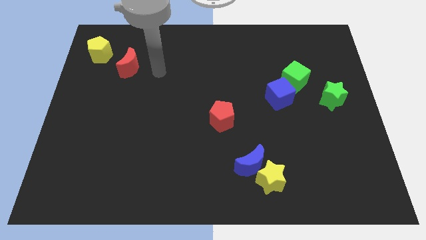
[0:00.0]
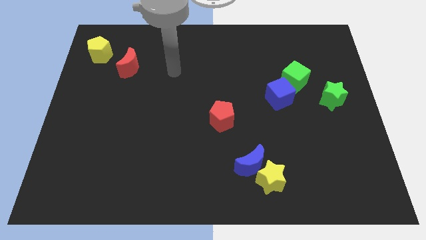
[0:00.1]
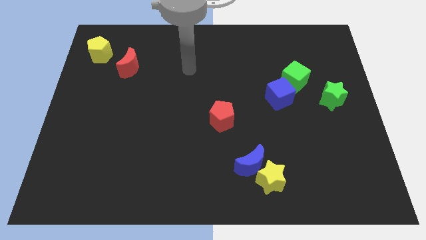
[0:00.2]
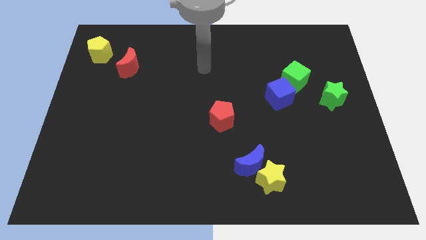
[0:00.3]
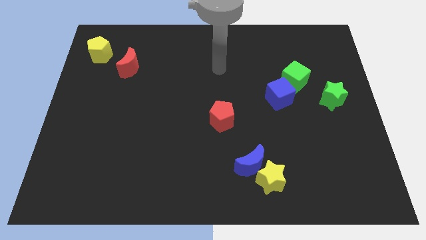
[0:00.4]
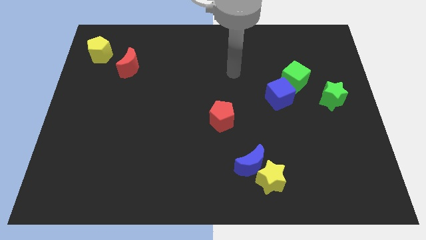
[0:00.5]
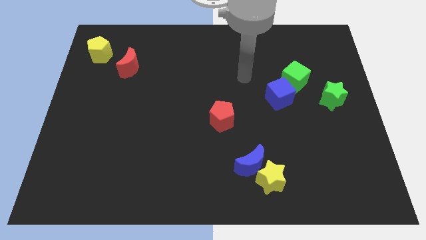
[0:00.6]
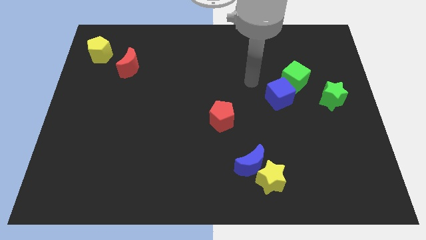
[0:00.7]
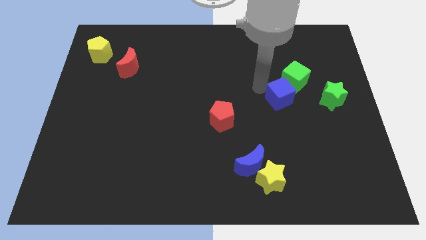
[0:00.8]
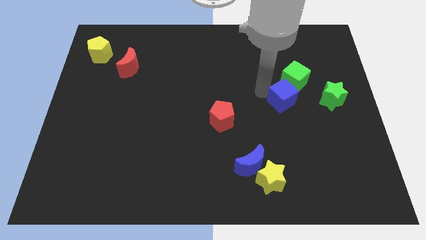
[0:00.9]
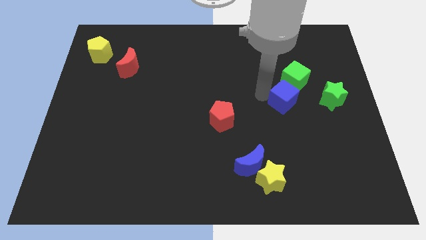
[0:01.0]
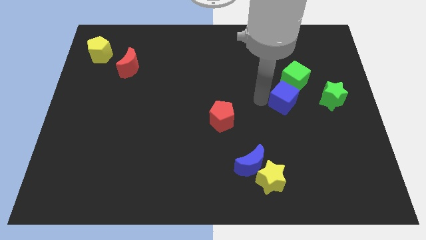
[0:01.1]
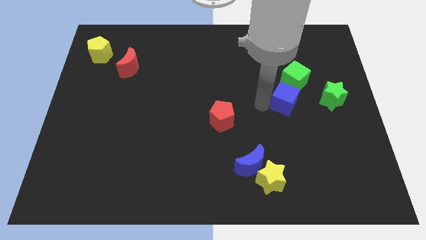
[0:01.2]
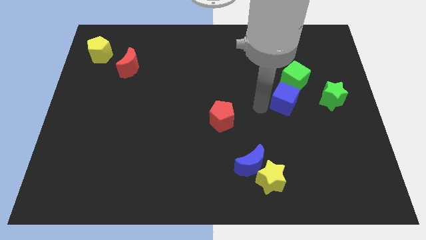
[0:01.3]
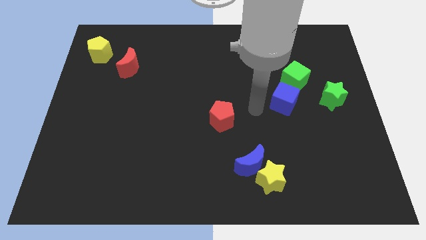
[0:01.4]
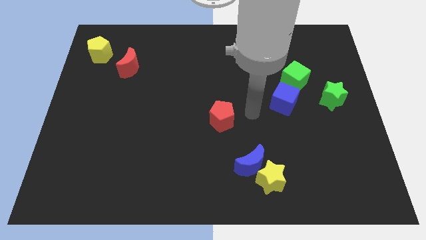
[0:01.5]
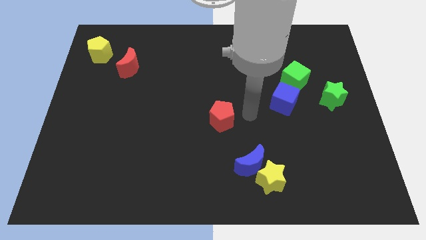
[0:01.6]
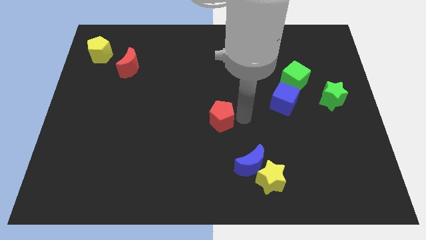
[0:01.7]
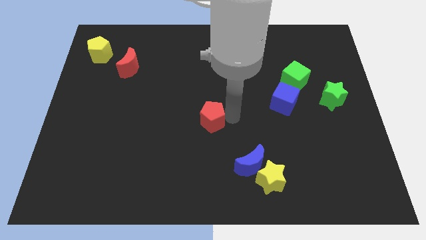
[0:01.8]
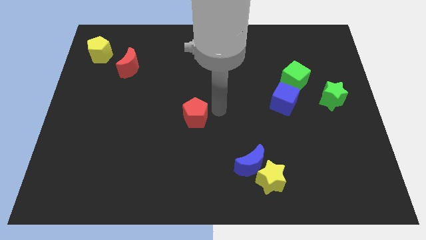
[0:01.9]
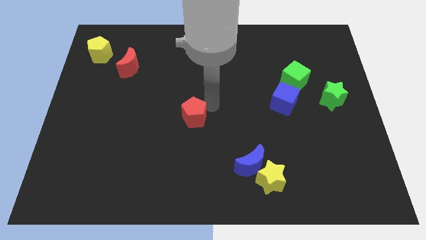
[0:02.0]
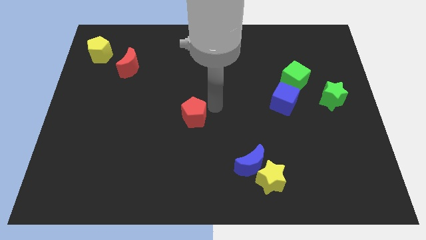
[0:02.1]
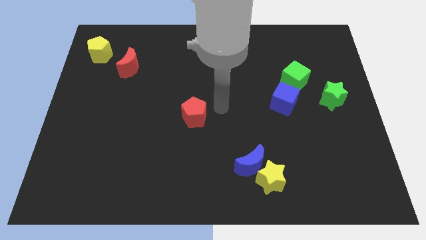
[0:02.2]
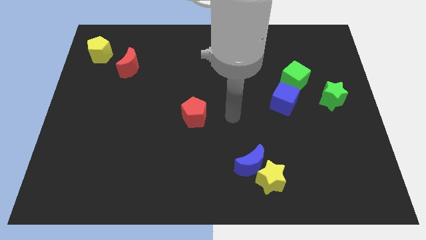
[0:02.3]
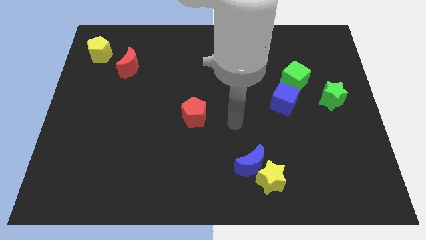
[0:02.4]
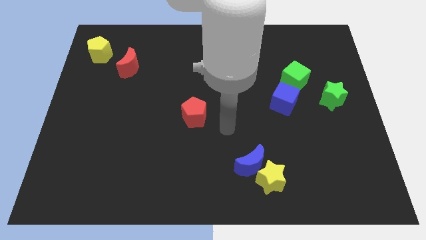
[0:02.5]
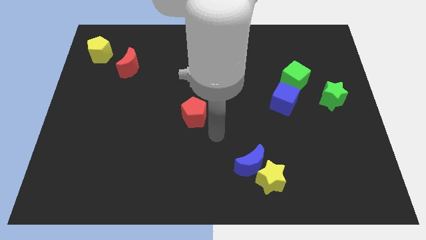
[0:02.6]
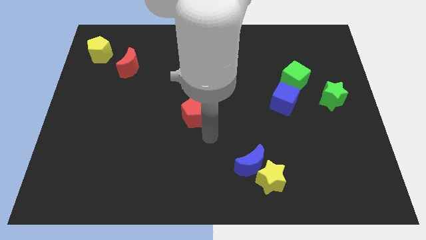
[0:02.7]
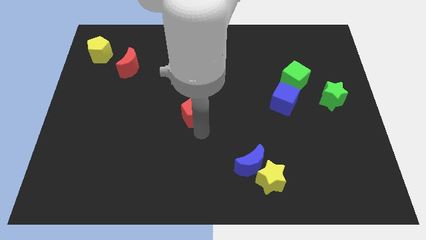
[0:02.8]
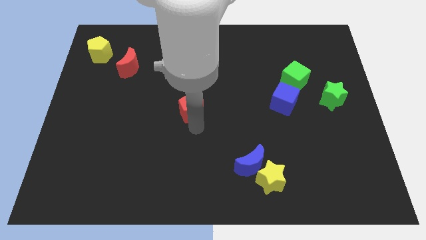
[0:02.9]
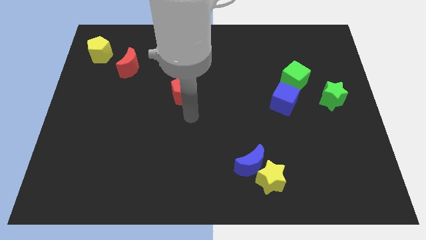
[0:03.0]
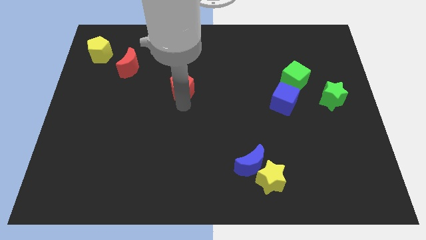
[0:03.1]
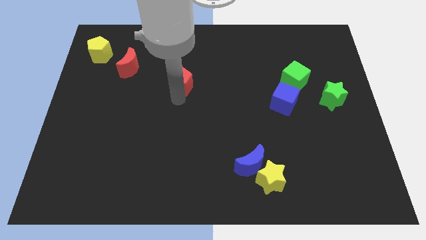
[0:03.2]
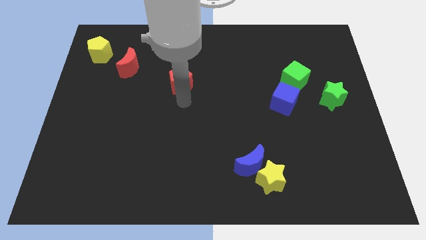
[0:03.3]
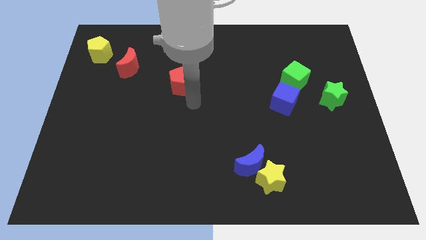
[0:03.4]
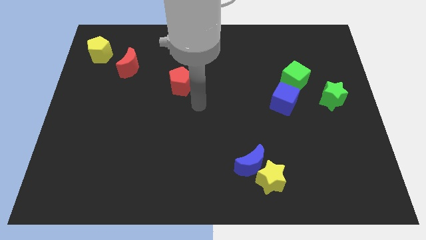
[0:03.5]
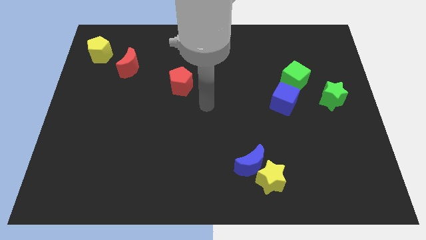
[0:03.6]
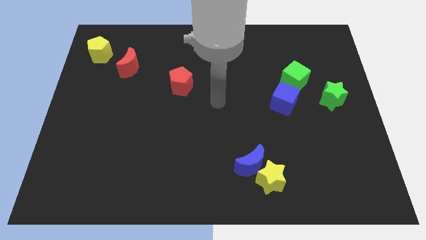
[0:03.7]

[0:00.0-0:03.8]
make a diagonal line out of red blocks and the yellow pentagon

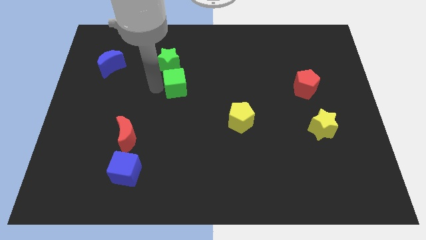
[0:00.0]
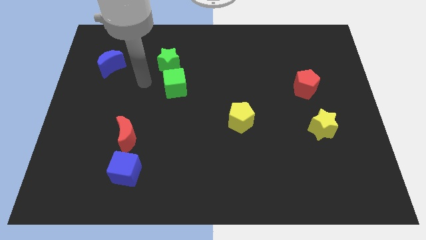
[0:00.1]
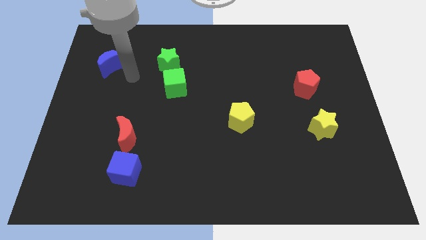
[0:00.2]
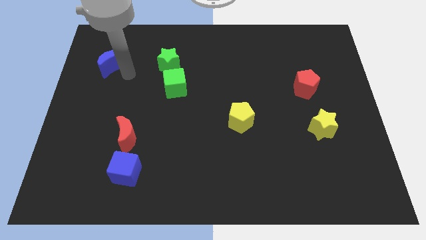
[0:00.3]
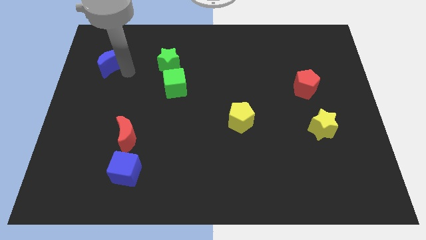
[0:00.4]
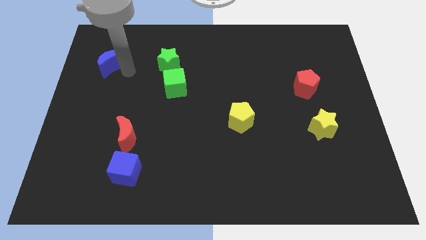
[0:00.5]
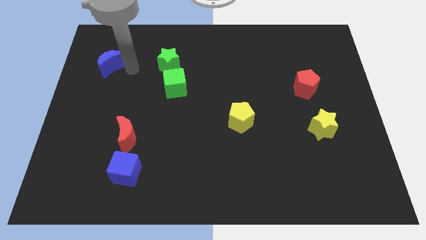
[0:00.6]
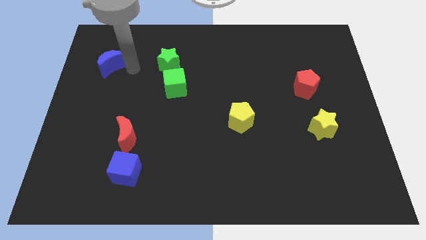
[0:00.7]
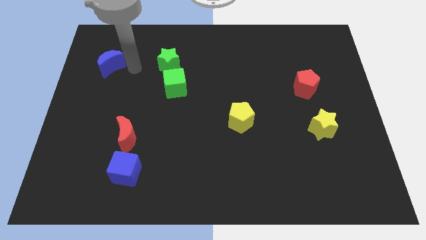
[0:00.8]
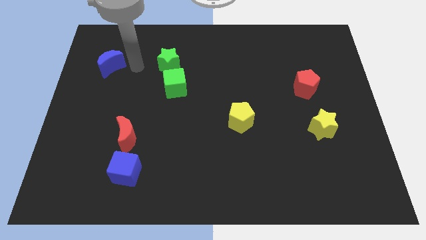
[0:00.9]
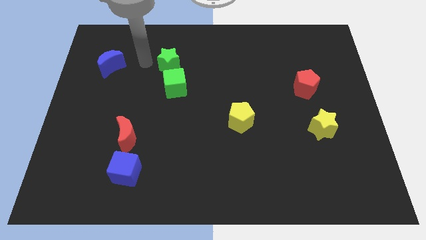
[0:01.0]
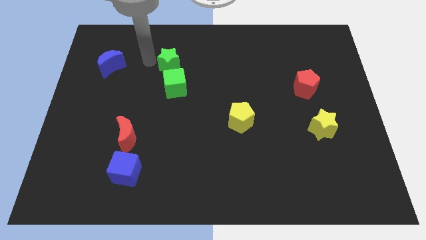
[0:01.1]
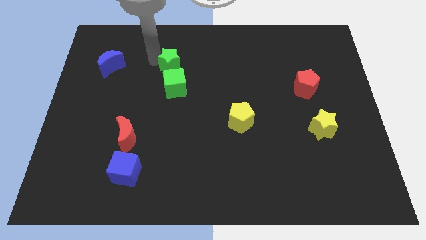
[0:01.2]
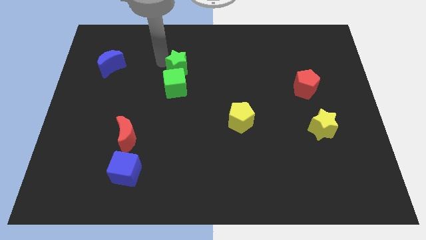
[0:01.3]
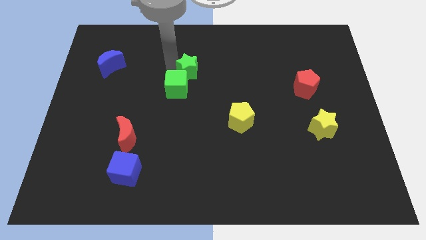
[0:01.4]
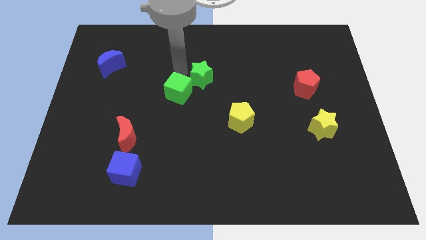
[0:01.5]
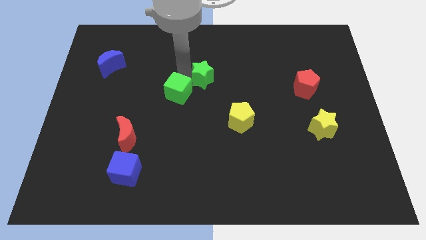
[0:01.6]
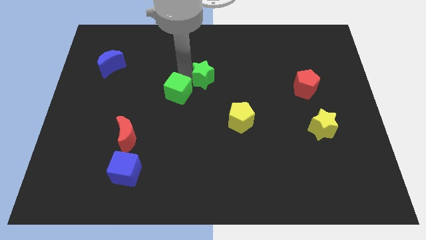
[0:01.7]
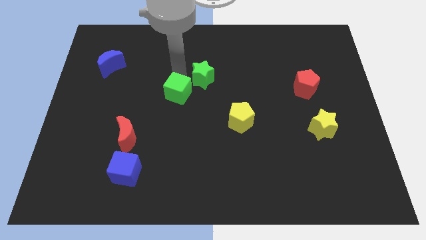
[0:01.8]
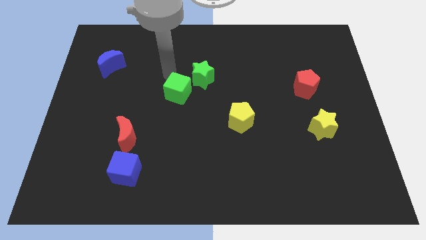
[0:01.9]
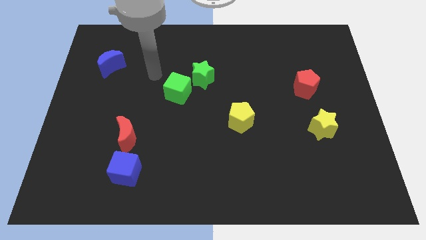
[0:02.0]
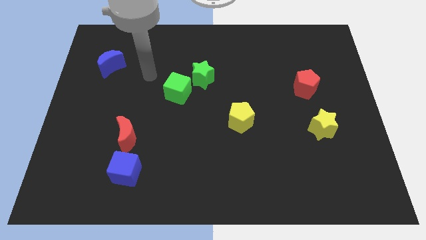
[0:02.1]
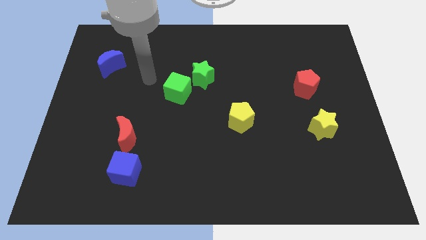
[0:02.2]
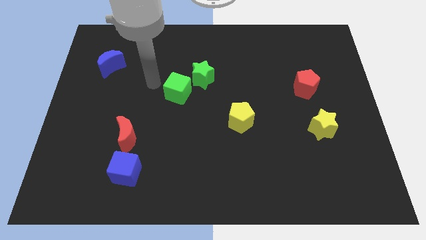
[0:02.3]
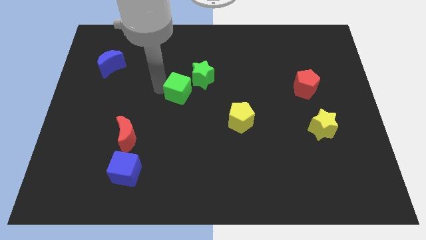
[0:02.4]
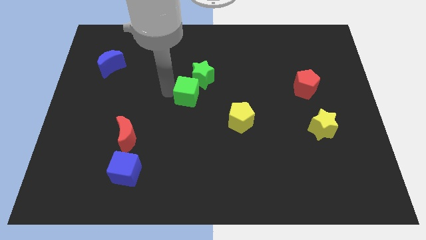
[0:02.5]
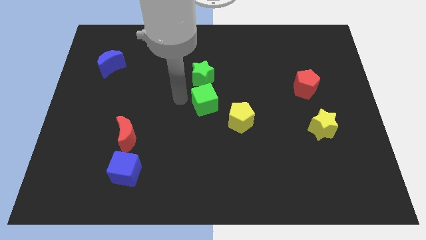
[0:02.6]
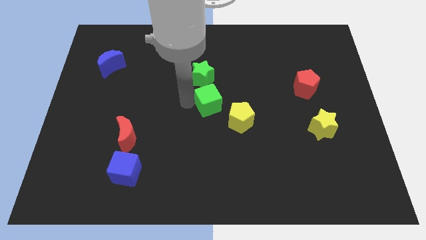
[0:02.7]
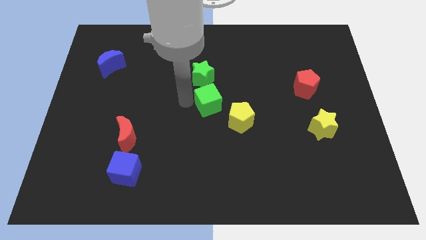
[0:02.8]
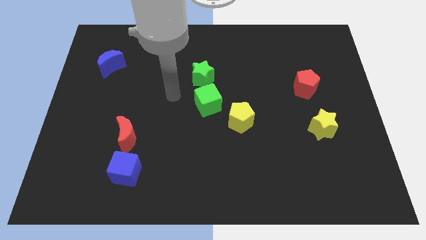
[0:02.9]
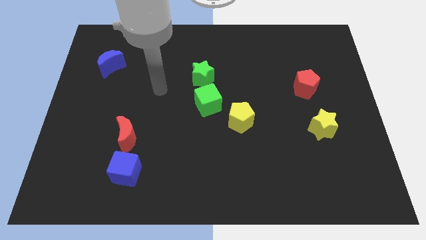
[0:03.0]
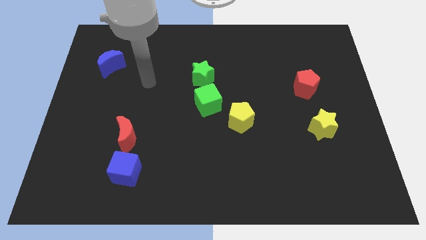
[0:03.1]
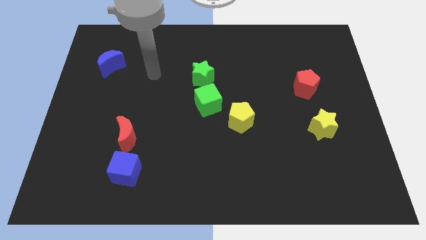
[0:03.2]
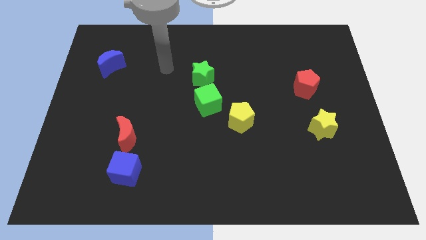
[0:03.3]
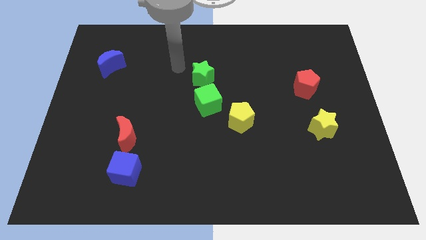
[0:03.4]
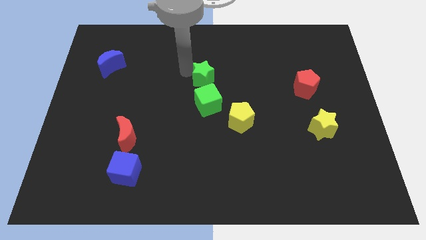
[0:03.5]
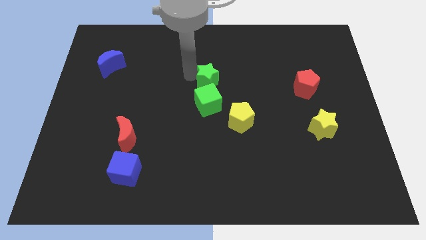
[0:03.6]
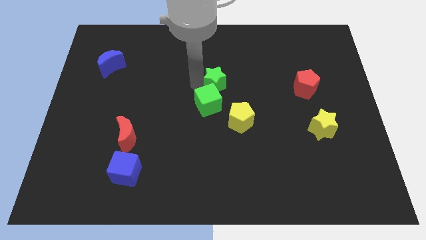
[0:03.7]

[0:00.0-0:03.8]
push the green star with green cube to the center of the board

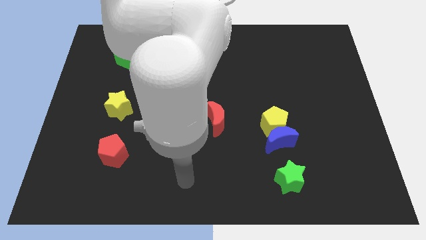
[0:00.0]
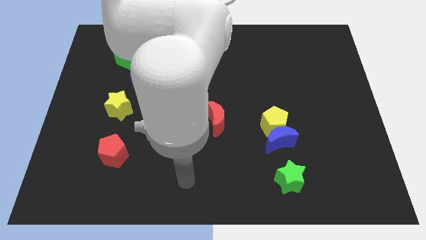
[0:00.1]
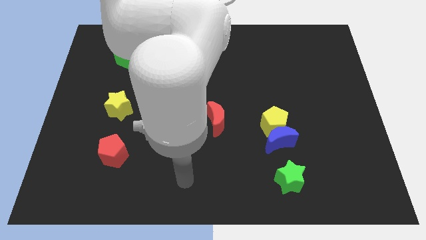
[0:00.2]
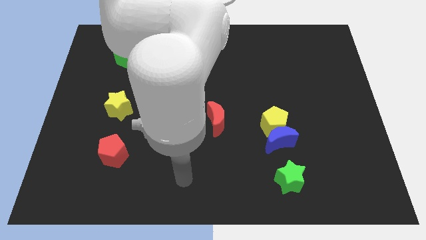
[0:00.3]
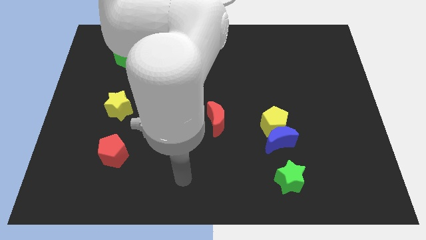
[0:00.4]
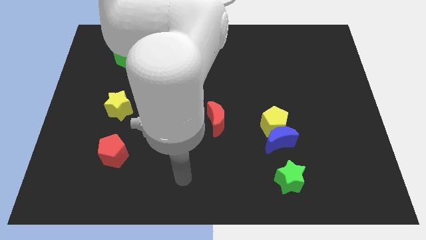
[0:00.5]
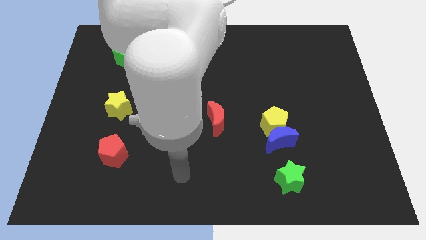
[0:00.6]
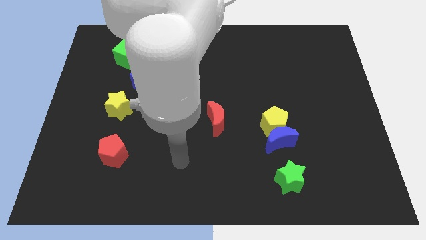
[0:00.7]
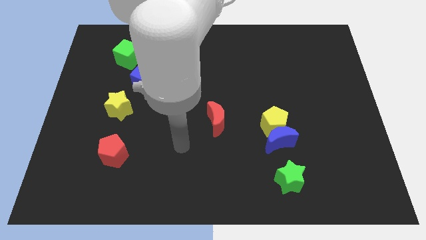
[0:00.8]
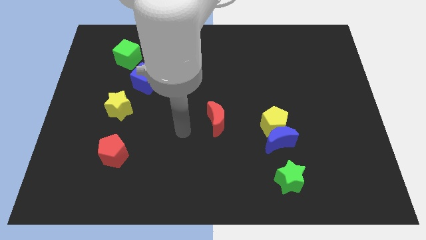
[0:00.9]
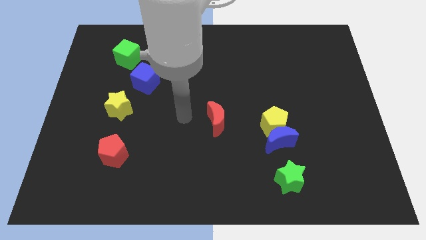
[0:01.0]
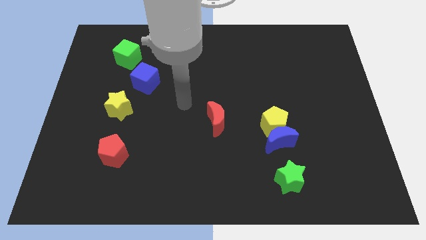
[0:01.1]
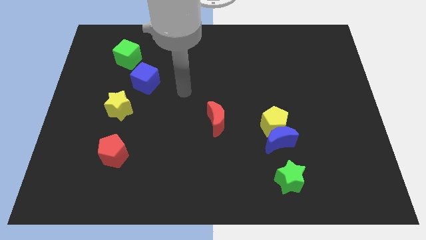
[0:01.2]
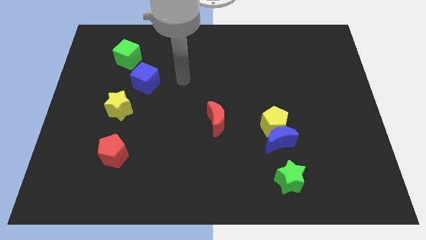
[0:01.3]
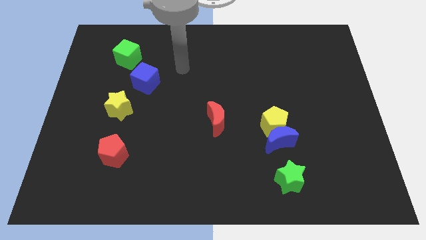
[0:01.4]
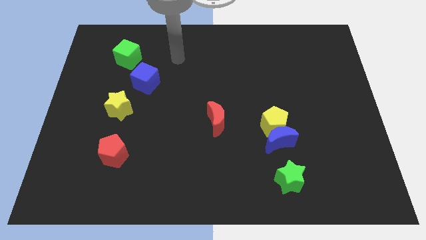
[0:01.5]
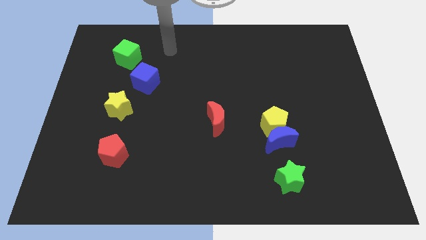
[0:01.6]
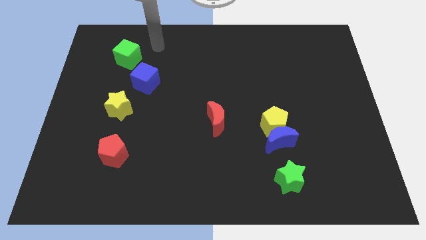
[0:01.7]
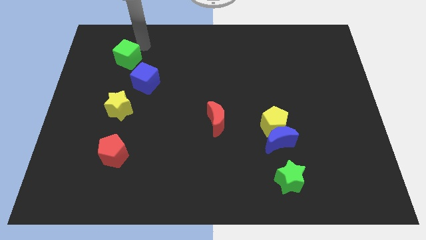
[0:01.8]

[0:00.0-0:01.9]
point your hand at the top side of the green cube
